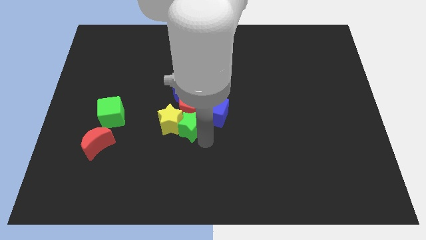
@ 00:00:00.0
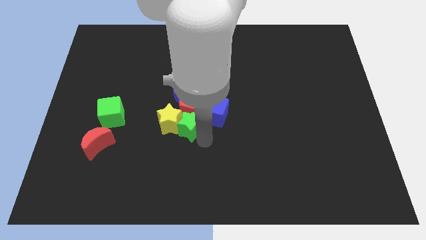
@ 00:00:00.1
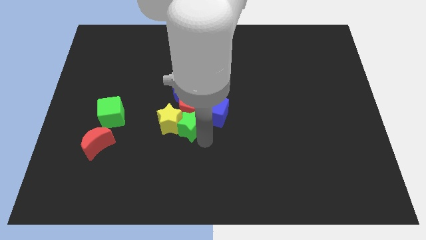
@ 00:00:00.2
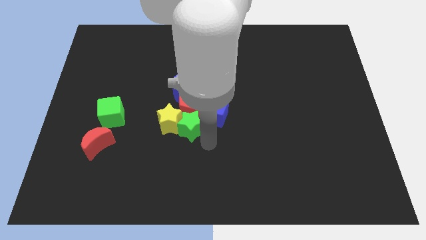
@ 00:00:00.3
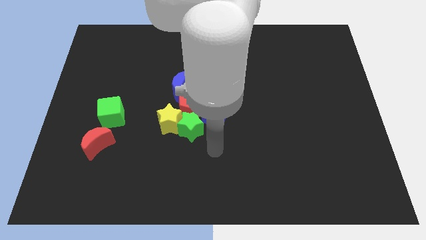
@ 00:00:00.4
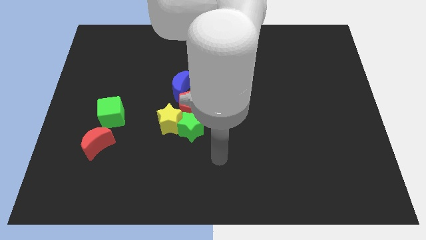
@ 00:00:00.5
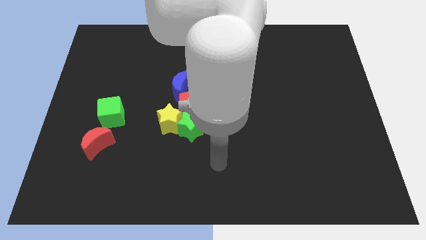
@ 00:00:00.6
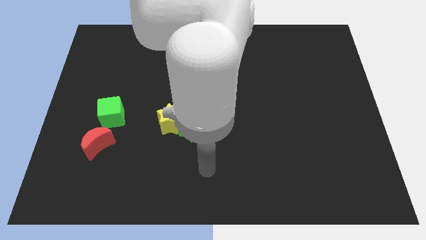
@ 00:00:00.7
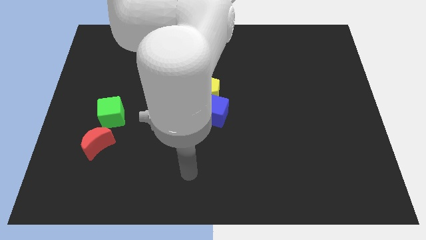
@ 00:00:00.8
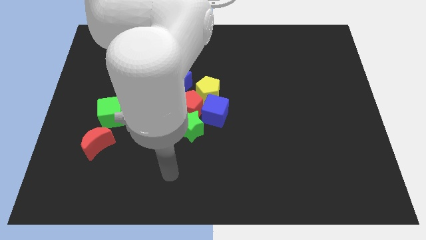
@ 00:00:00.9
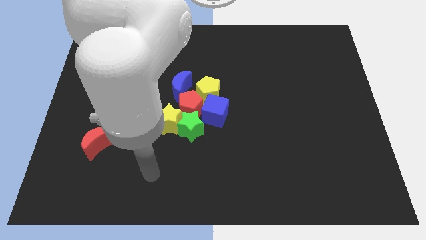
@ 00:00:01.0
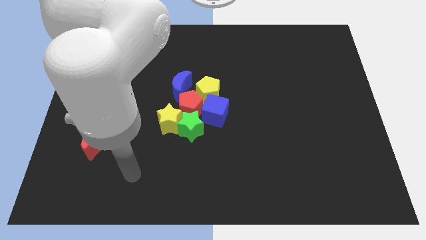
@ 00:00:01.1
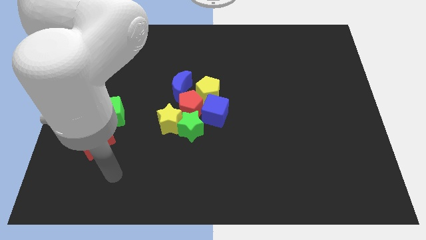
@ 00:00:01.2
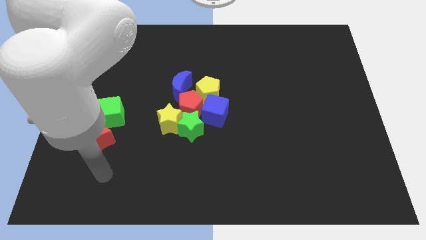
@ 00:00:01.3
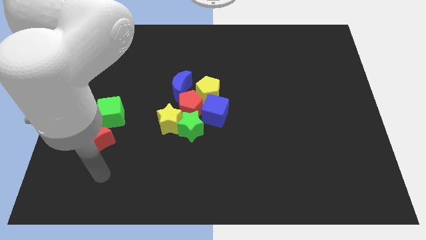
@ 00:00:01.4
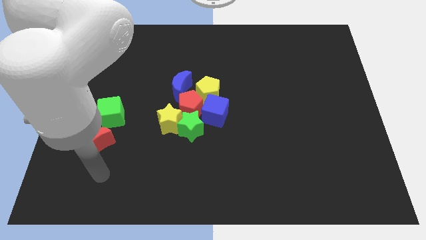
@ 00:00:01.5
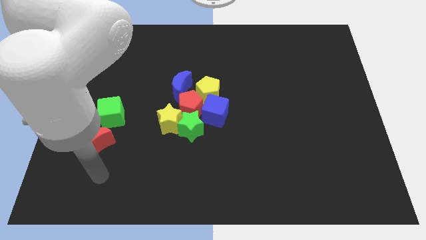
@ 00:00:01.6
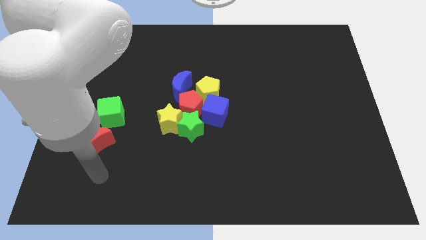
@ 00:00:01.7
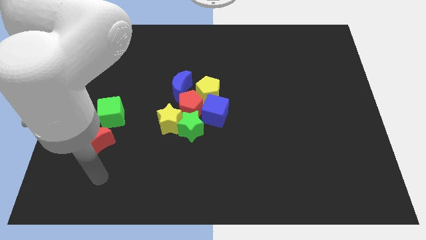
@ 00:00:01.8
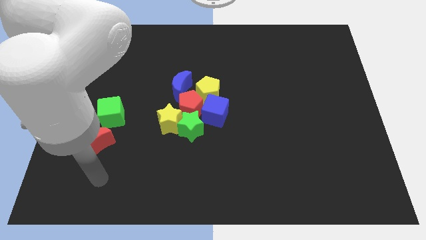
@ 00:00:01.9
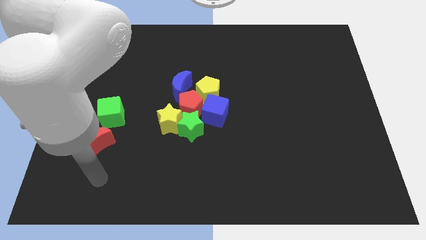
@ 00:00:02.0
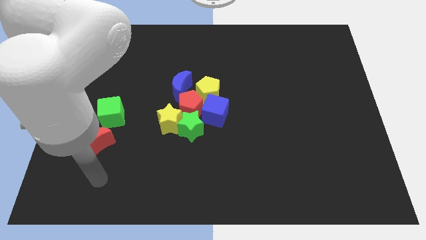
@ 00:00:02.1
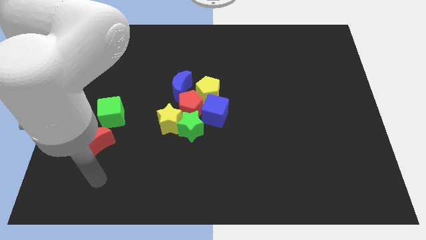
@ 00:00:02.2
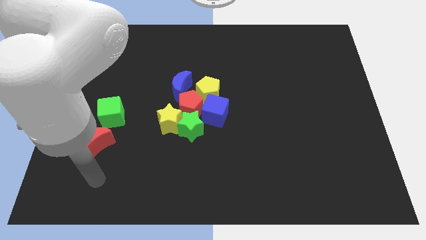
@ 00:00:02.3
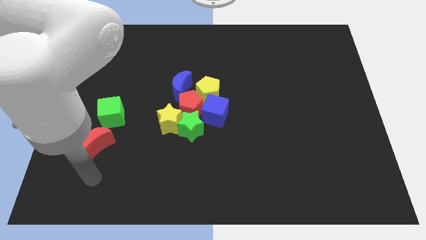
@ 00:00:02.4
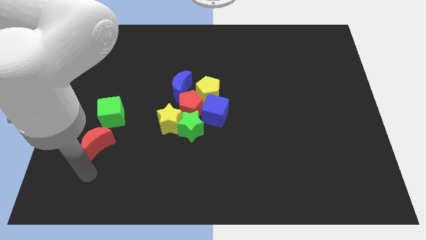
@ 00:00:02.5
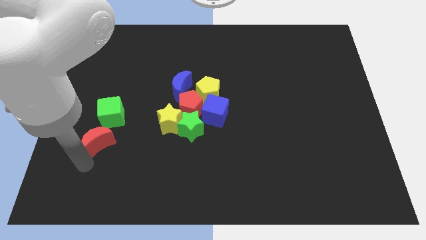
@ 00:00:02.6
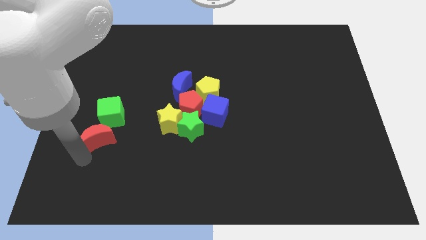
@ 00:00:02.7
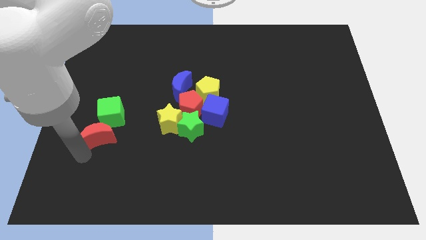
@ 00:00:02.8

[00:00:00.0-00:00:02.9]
move the arm away from the green star

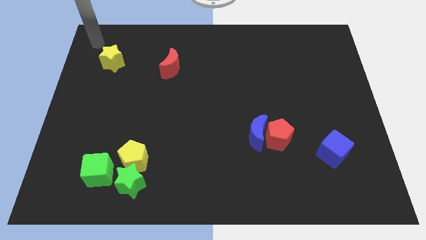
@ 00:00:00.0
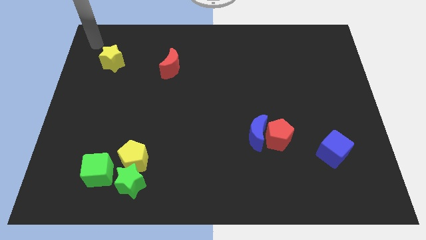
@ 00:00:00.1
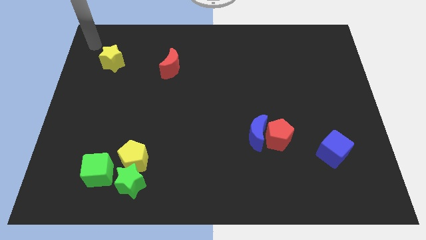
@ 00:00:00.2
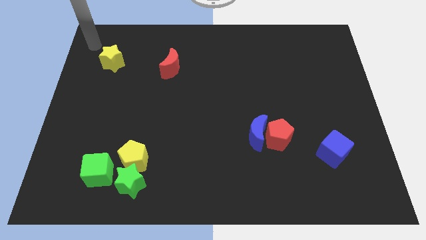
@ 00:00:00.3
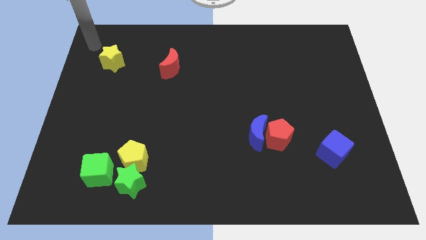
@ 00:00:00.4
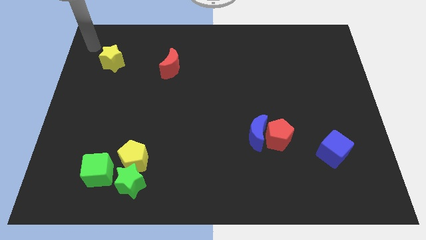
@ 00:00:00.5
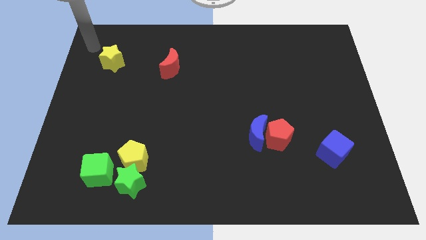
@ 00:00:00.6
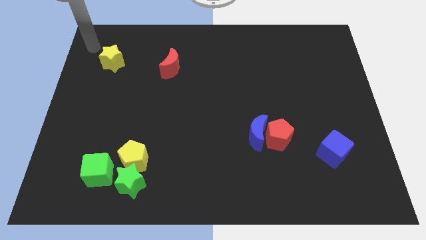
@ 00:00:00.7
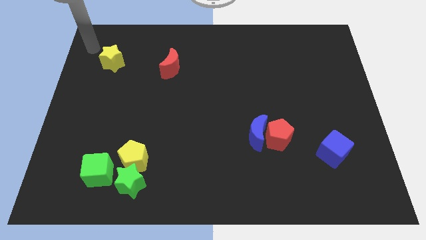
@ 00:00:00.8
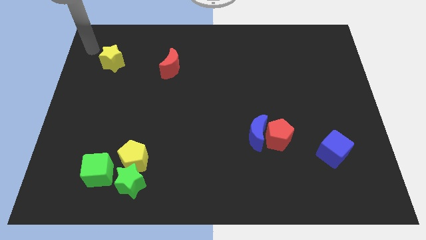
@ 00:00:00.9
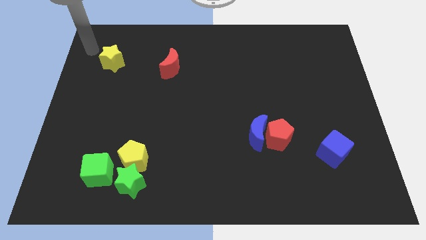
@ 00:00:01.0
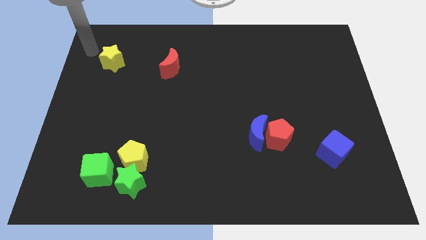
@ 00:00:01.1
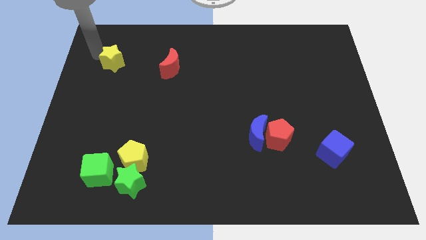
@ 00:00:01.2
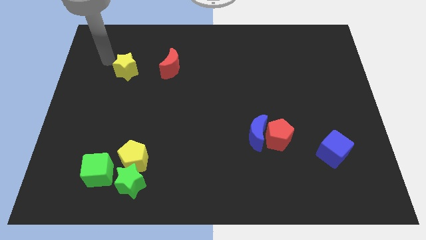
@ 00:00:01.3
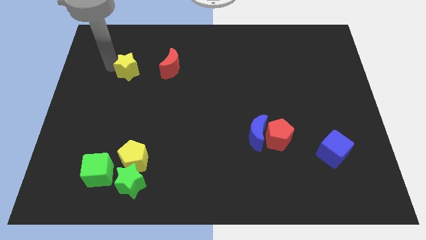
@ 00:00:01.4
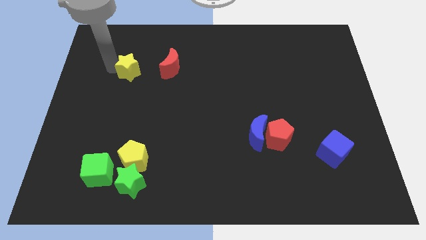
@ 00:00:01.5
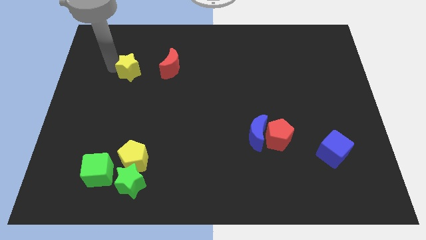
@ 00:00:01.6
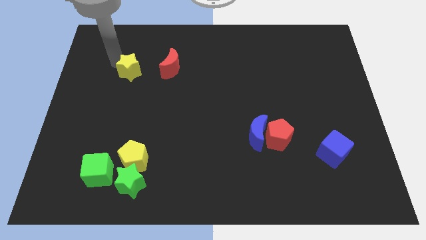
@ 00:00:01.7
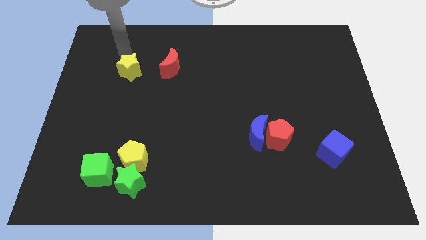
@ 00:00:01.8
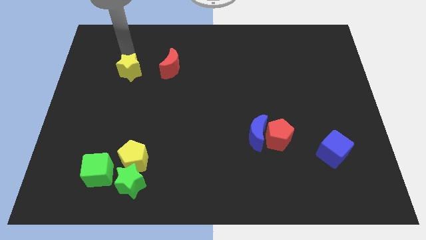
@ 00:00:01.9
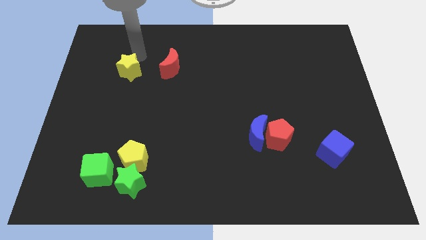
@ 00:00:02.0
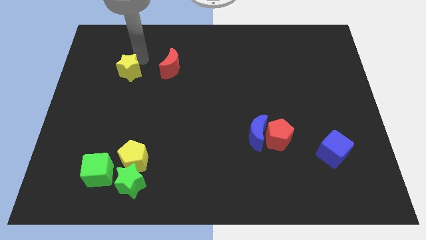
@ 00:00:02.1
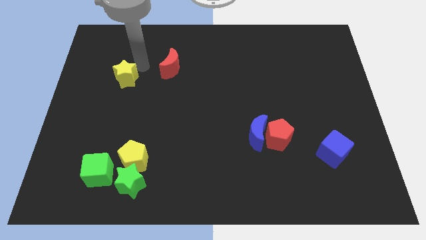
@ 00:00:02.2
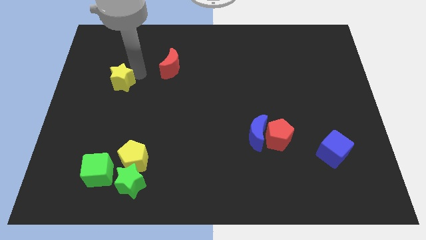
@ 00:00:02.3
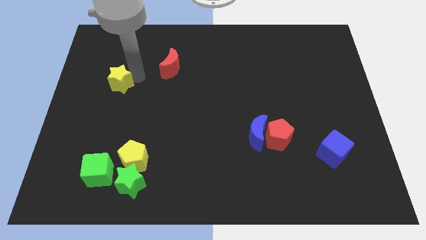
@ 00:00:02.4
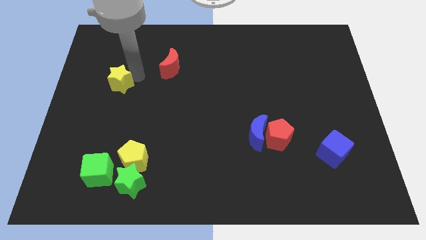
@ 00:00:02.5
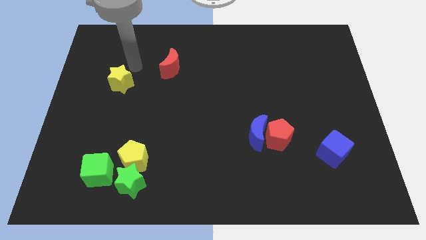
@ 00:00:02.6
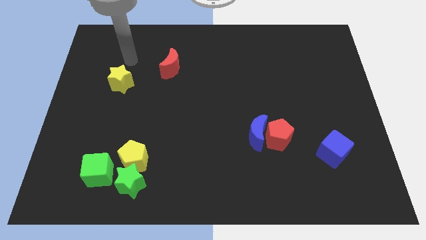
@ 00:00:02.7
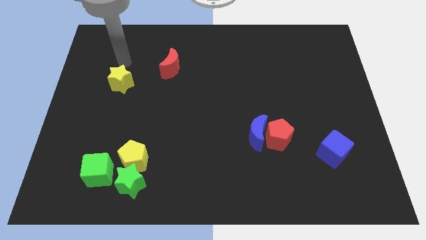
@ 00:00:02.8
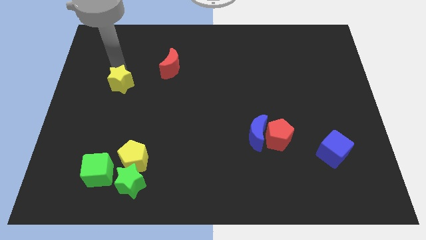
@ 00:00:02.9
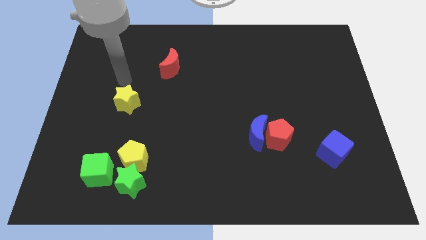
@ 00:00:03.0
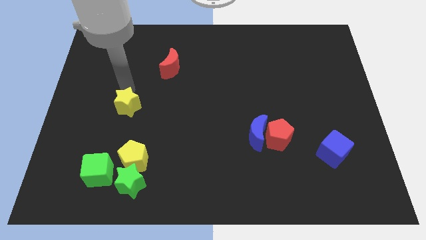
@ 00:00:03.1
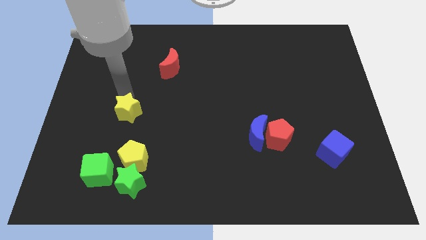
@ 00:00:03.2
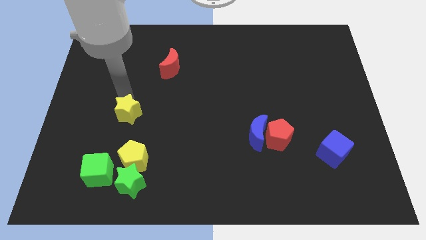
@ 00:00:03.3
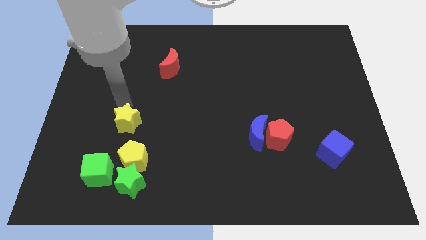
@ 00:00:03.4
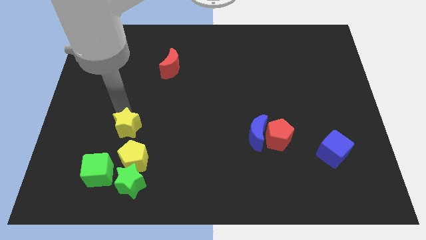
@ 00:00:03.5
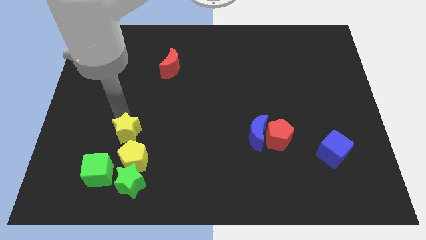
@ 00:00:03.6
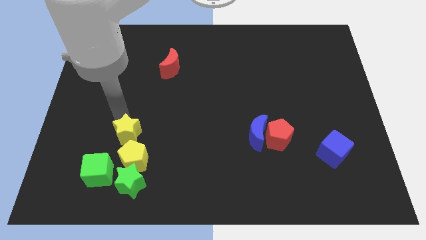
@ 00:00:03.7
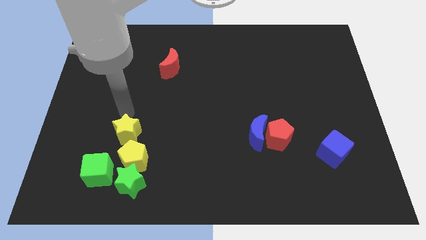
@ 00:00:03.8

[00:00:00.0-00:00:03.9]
move the yellow star above the yellow pentagon

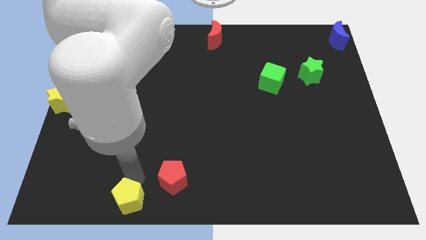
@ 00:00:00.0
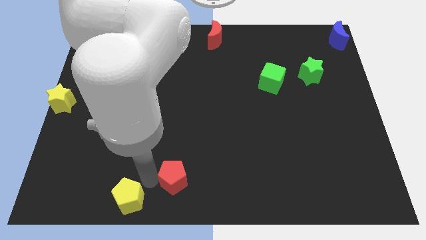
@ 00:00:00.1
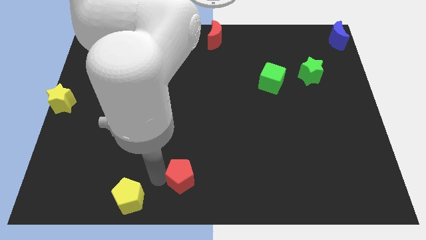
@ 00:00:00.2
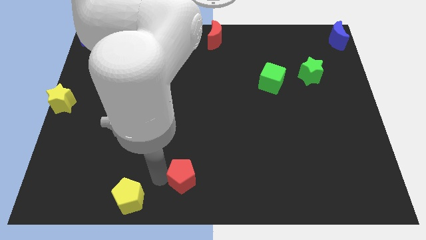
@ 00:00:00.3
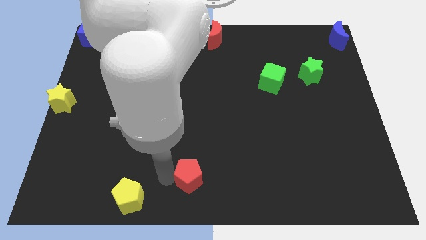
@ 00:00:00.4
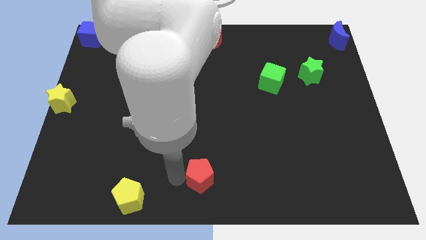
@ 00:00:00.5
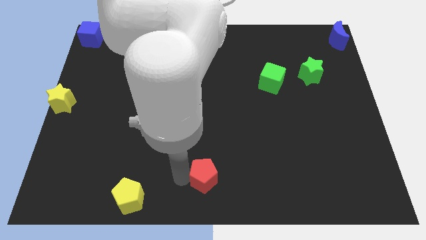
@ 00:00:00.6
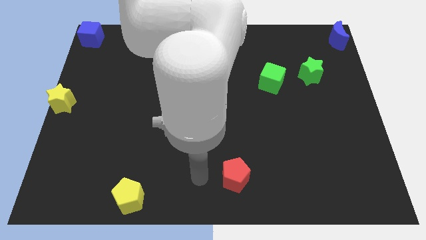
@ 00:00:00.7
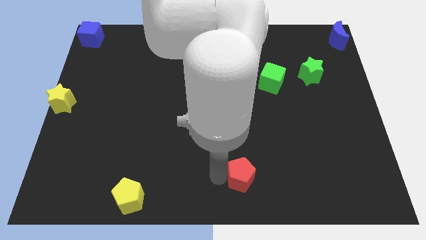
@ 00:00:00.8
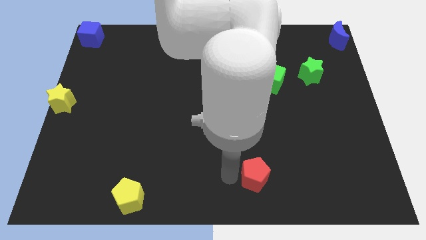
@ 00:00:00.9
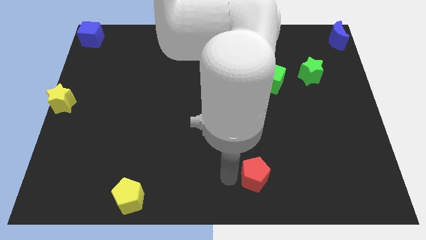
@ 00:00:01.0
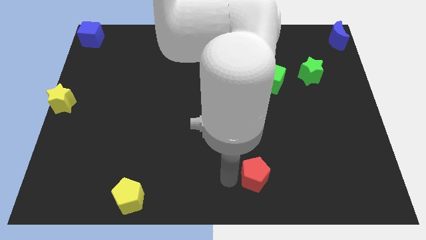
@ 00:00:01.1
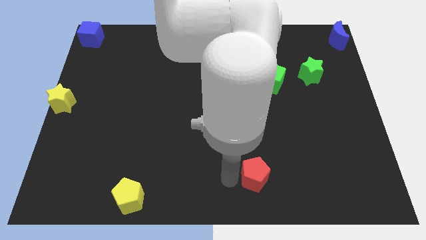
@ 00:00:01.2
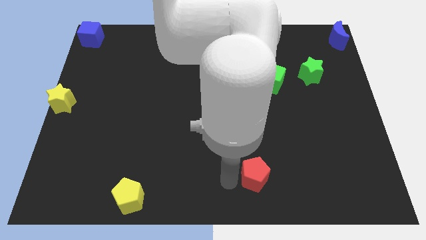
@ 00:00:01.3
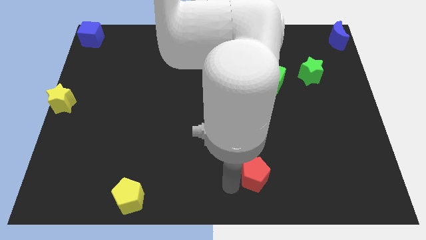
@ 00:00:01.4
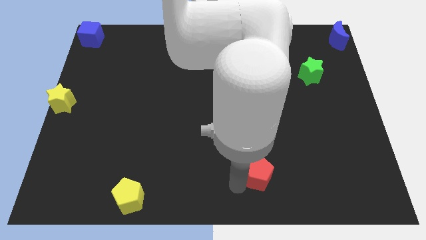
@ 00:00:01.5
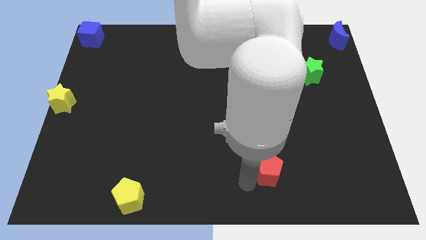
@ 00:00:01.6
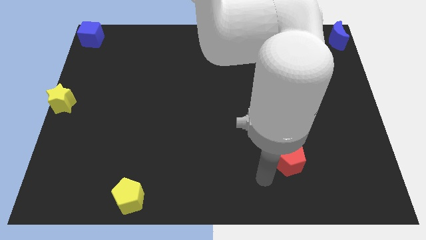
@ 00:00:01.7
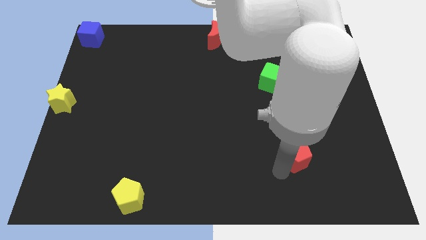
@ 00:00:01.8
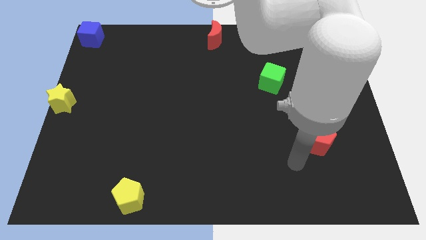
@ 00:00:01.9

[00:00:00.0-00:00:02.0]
separate the red pentagon from yellow pentagon
